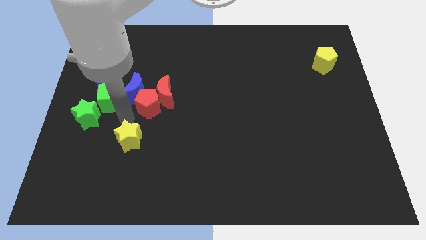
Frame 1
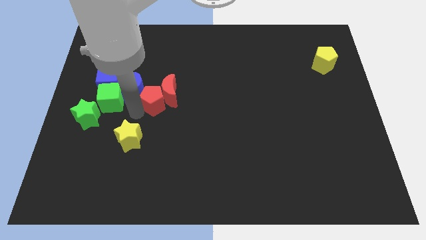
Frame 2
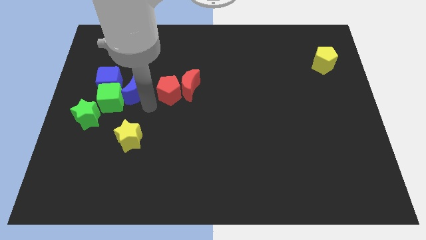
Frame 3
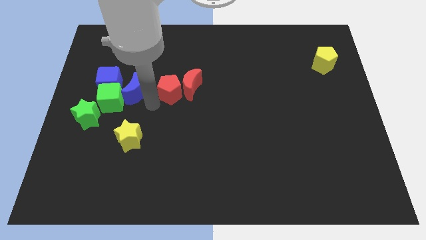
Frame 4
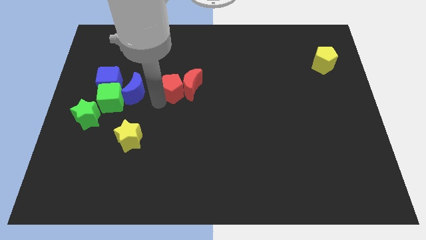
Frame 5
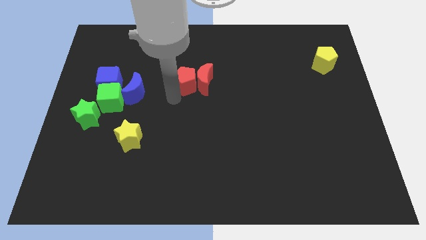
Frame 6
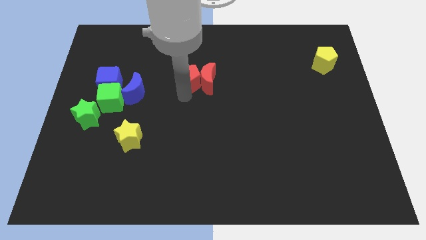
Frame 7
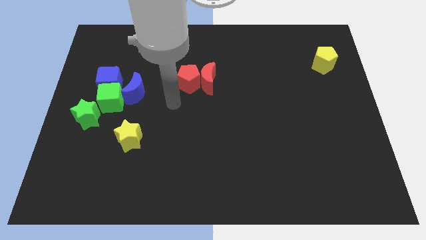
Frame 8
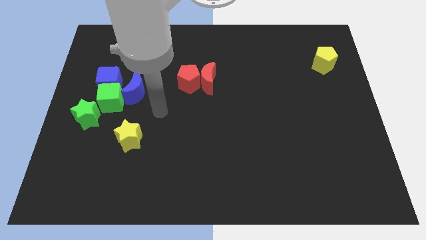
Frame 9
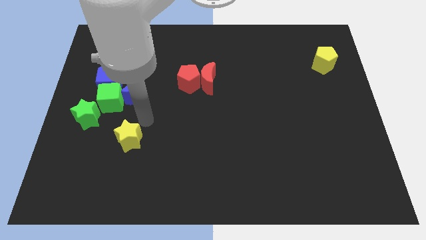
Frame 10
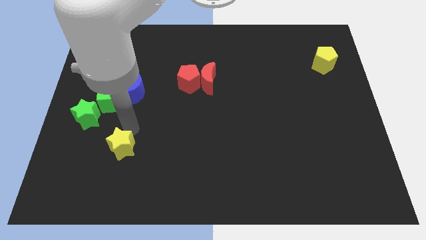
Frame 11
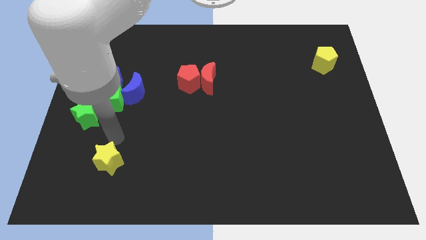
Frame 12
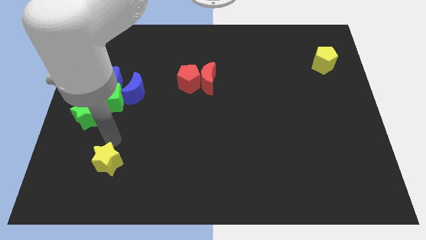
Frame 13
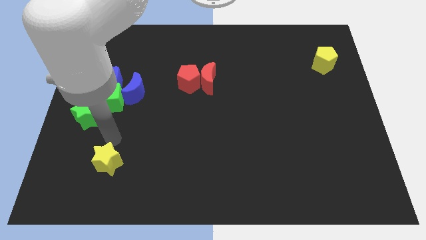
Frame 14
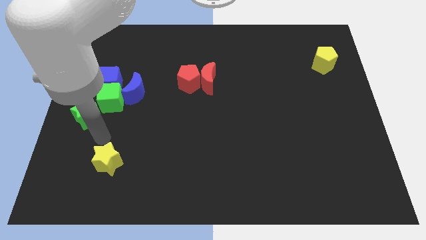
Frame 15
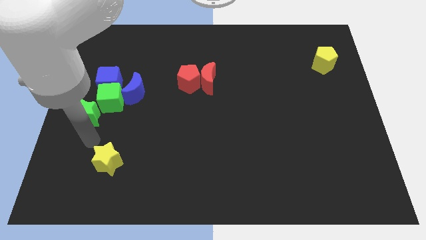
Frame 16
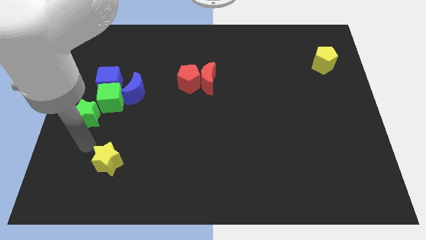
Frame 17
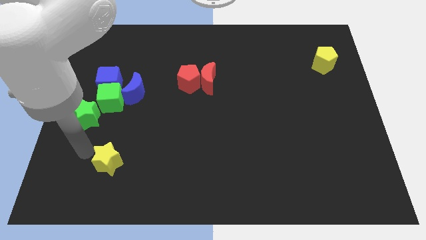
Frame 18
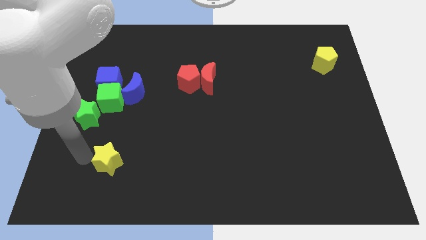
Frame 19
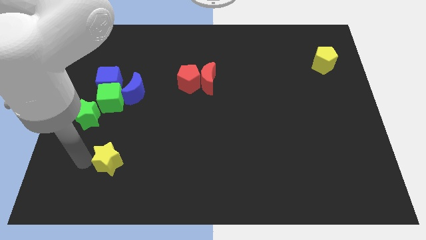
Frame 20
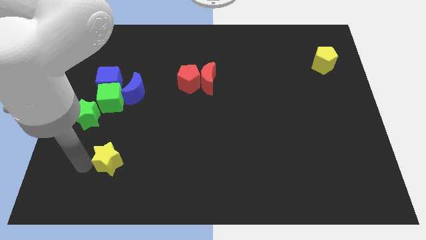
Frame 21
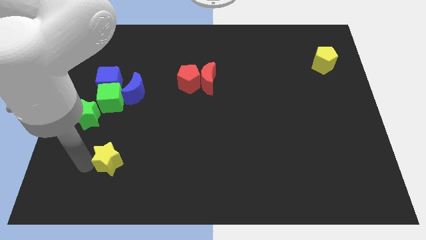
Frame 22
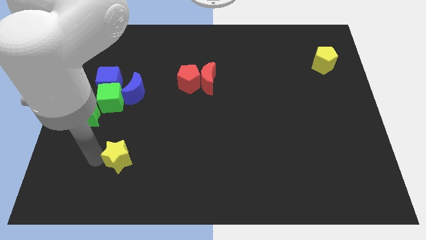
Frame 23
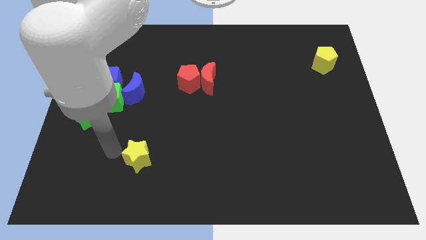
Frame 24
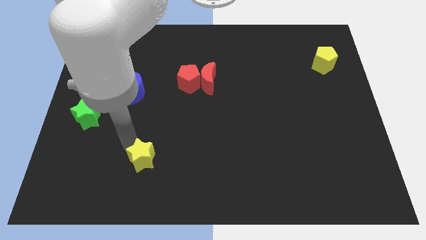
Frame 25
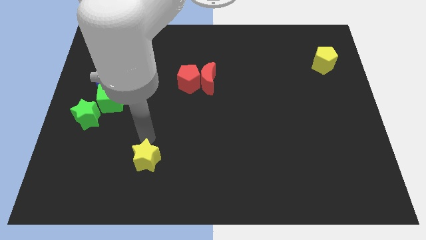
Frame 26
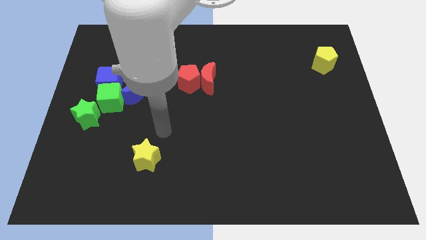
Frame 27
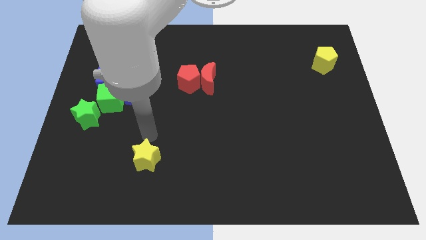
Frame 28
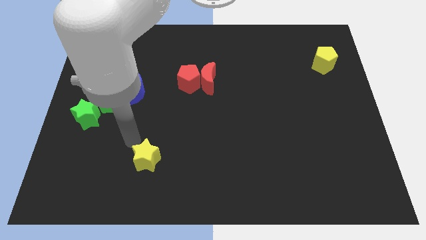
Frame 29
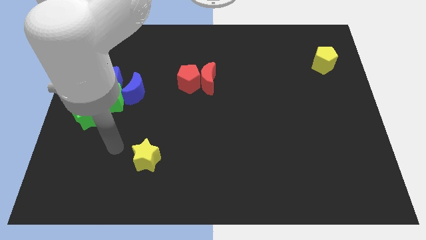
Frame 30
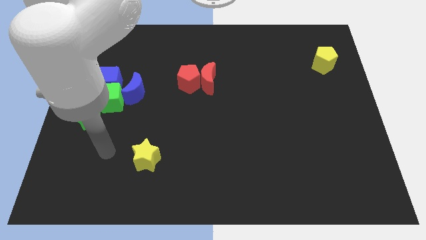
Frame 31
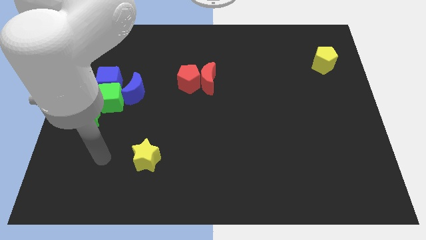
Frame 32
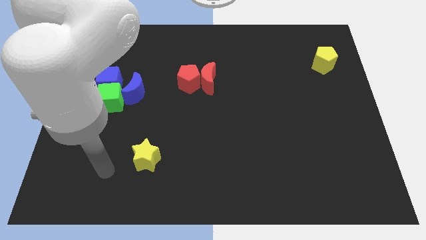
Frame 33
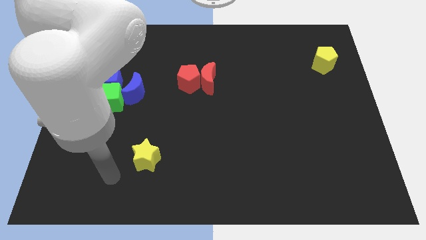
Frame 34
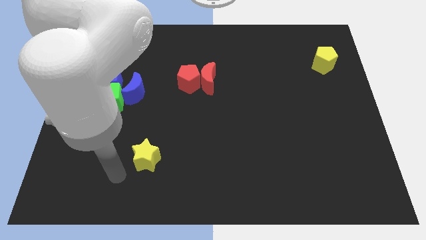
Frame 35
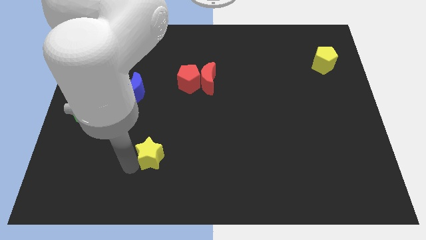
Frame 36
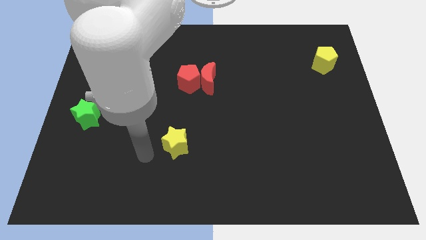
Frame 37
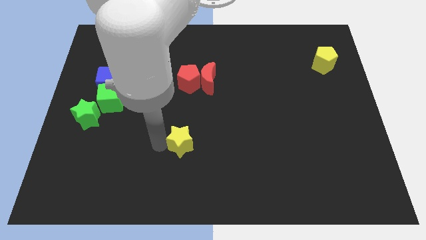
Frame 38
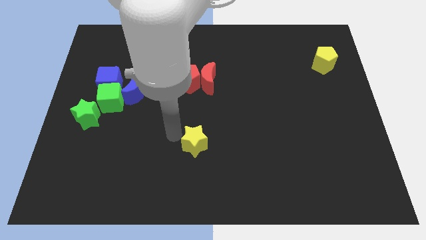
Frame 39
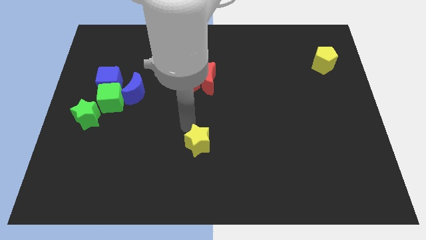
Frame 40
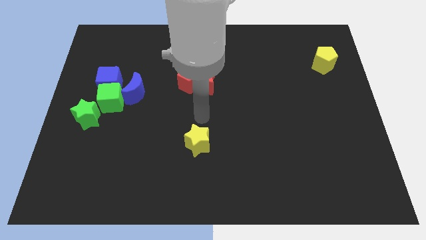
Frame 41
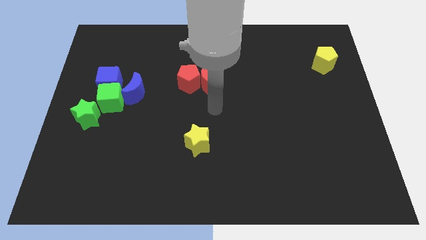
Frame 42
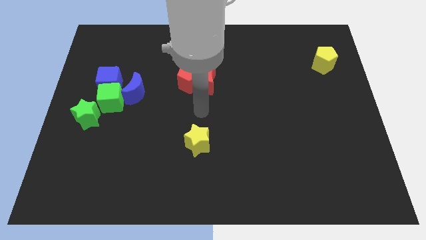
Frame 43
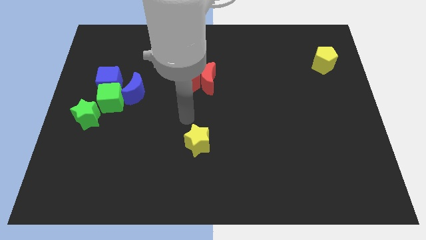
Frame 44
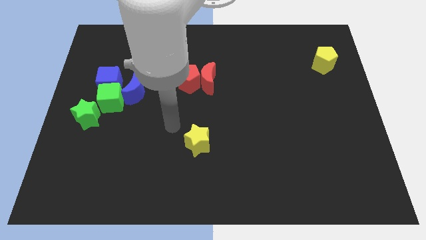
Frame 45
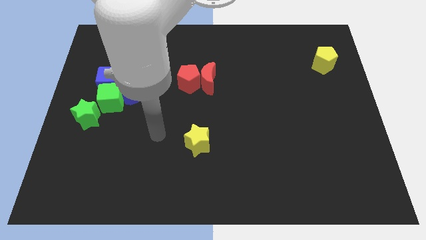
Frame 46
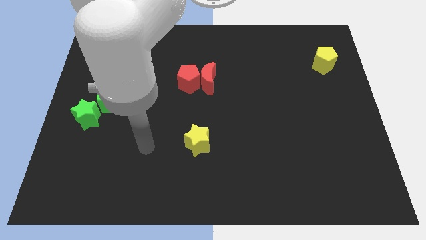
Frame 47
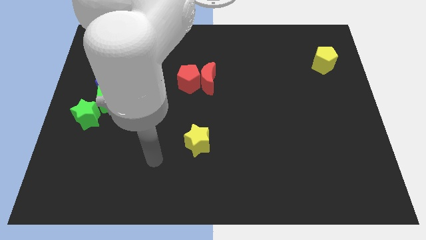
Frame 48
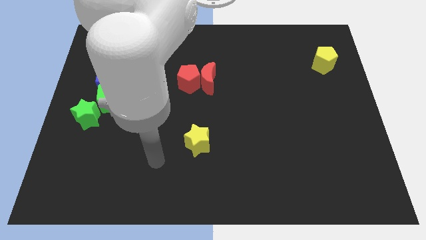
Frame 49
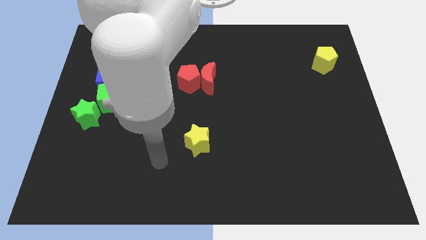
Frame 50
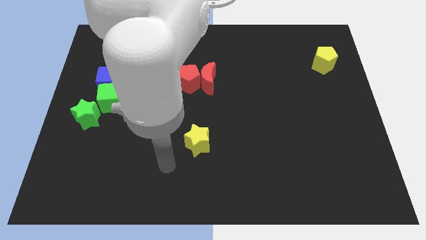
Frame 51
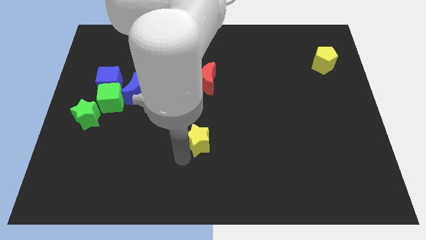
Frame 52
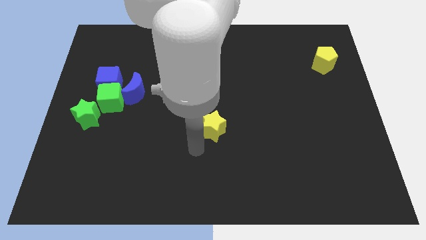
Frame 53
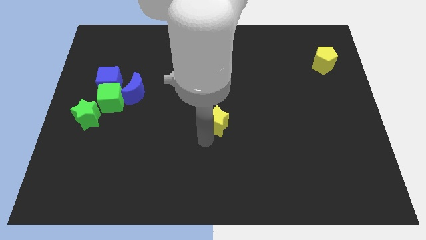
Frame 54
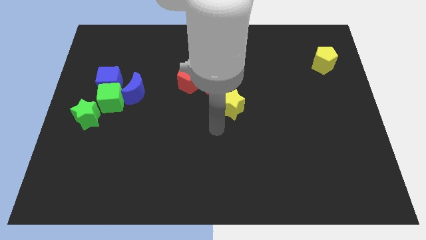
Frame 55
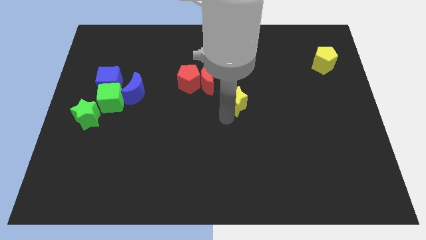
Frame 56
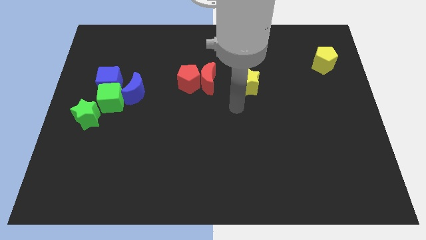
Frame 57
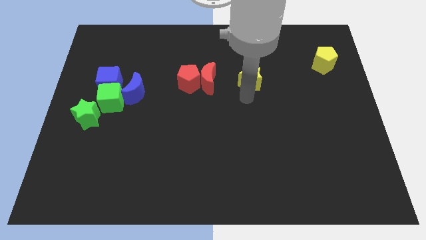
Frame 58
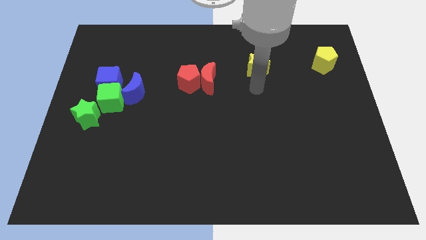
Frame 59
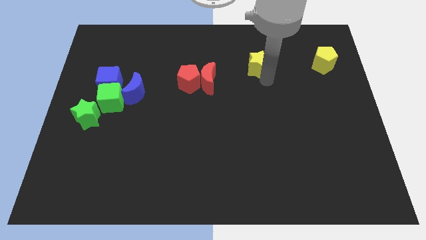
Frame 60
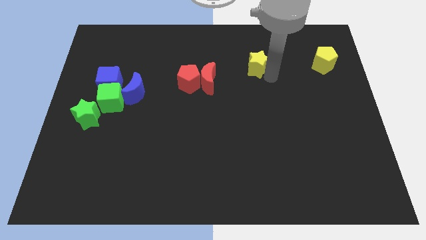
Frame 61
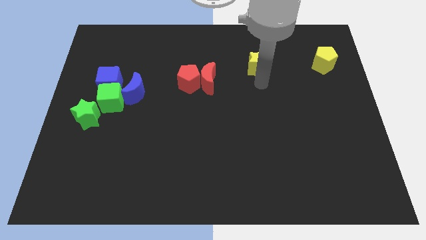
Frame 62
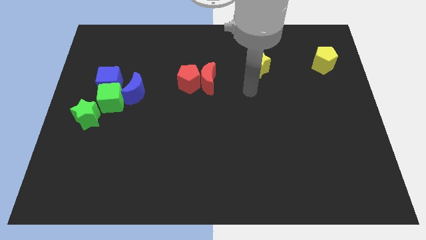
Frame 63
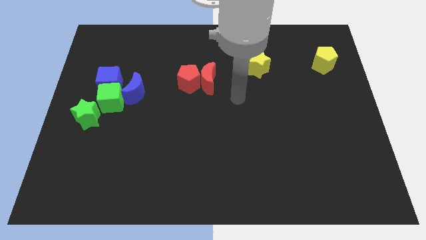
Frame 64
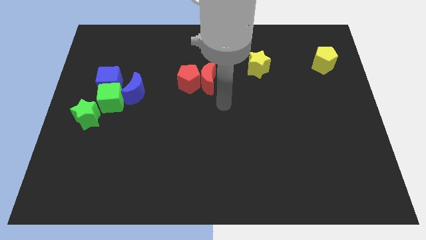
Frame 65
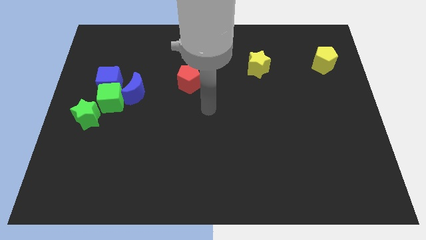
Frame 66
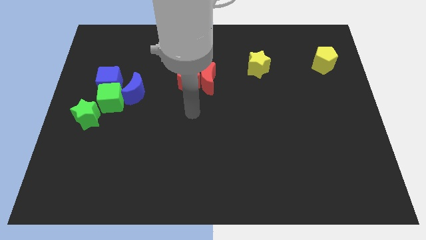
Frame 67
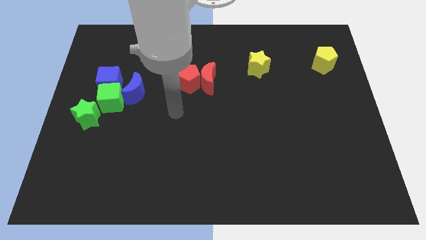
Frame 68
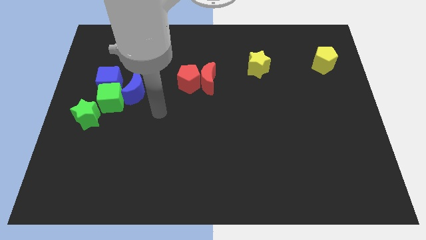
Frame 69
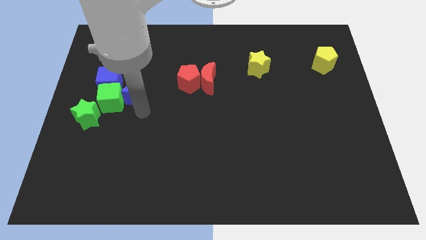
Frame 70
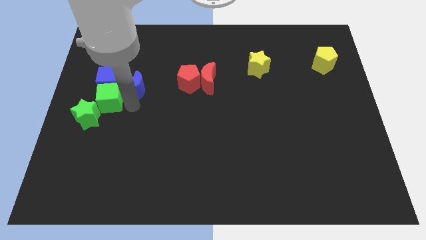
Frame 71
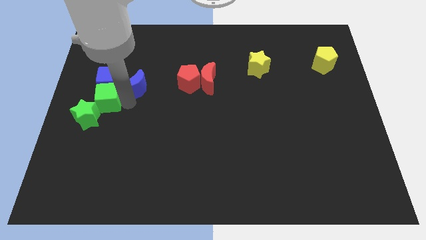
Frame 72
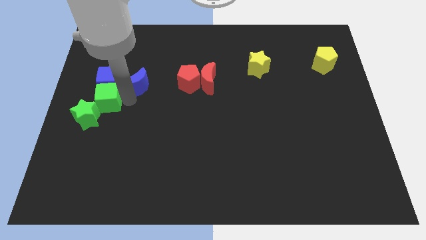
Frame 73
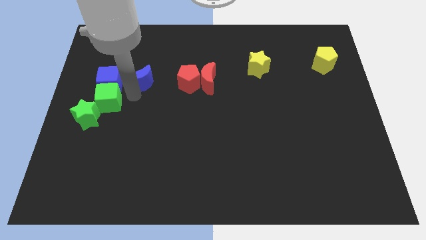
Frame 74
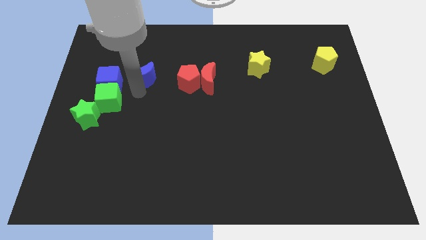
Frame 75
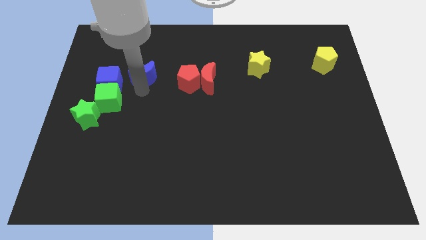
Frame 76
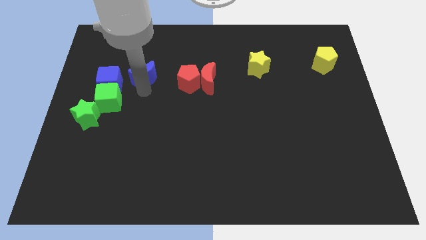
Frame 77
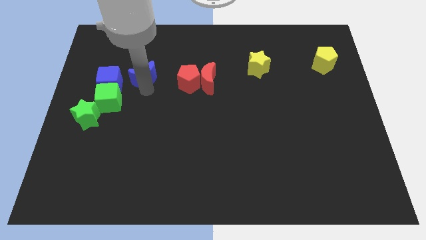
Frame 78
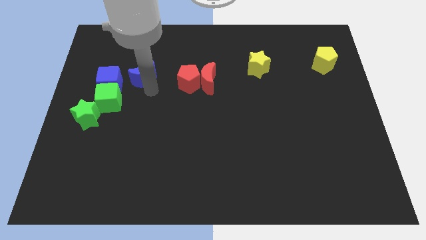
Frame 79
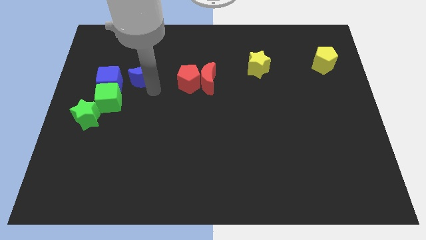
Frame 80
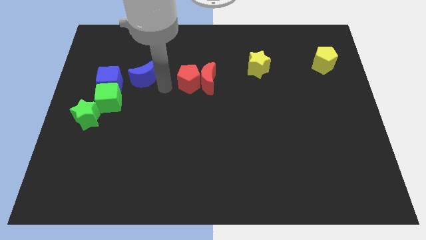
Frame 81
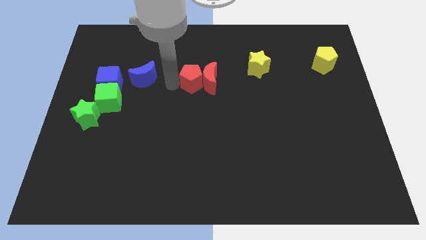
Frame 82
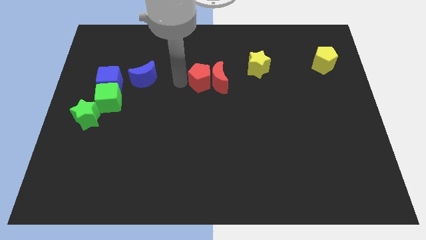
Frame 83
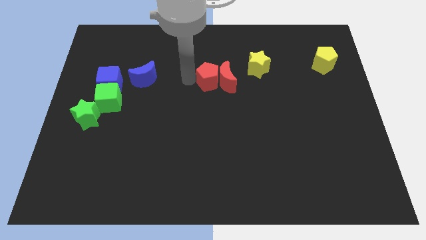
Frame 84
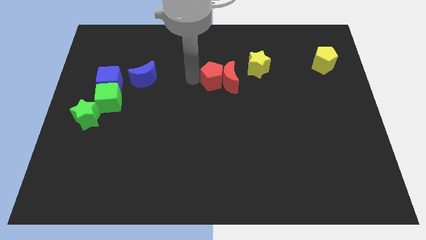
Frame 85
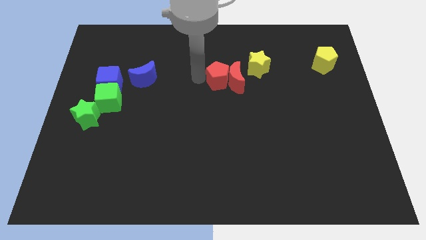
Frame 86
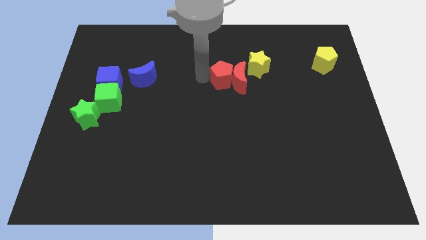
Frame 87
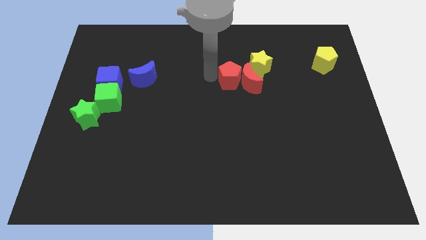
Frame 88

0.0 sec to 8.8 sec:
move the red blocks and yellow star towards the left side of the yellow pentagon

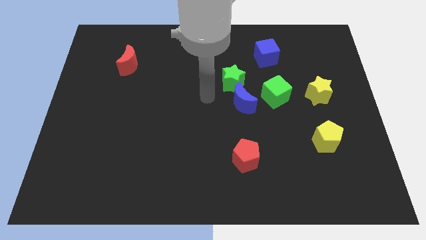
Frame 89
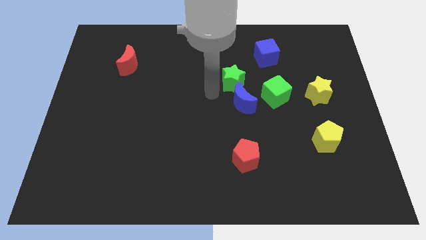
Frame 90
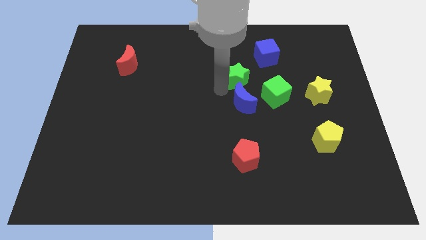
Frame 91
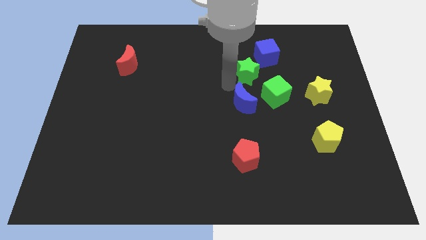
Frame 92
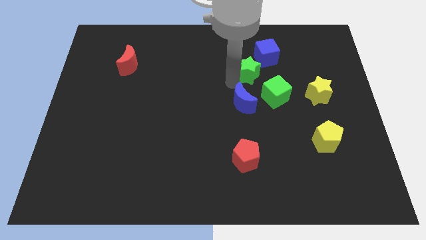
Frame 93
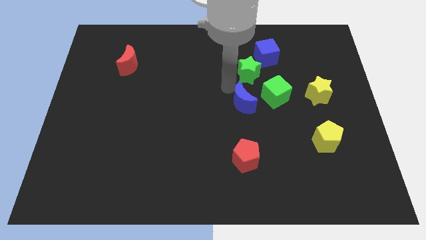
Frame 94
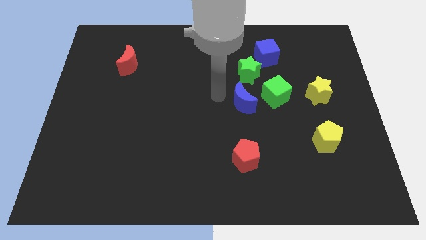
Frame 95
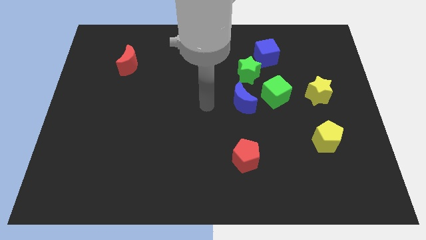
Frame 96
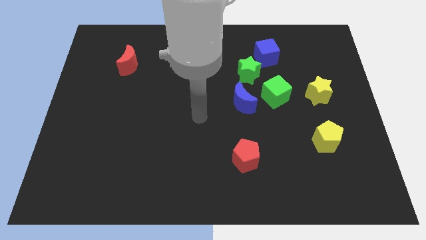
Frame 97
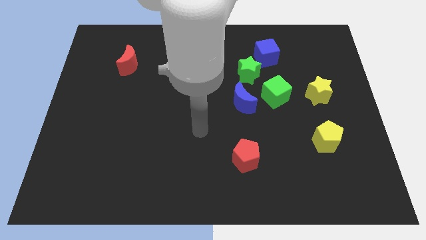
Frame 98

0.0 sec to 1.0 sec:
move green star near blue cube
